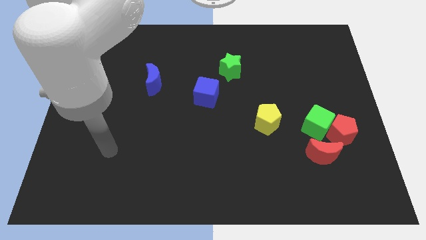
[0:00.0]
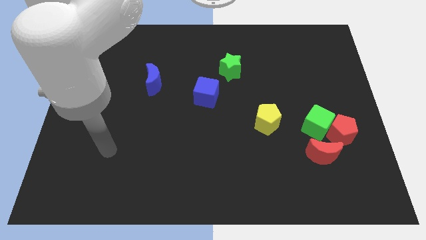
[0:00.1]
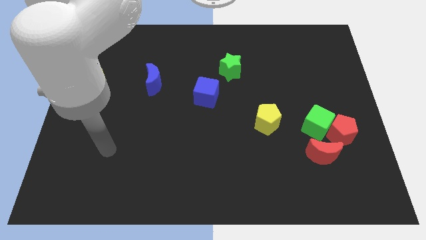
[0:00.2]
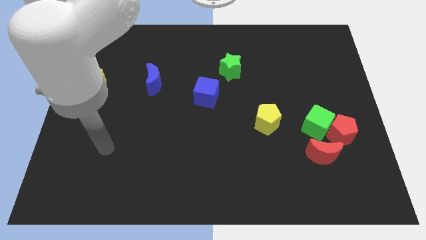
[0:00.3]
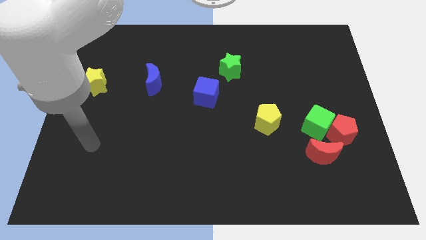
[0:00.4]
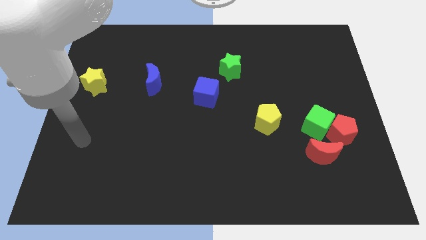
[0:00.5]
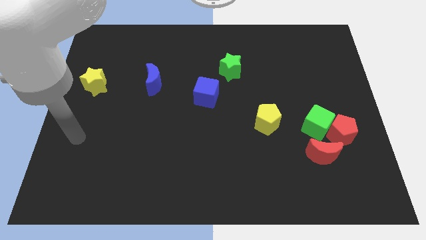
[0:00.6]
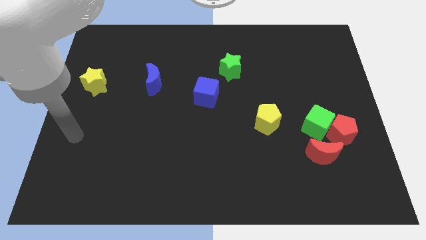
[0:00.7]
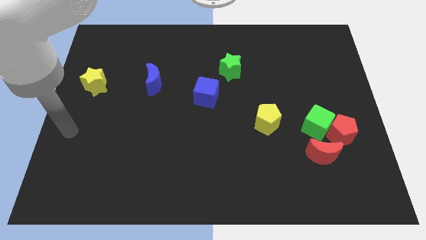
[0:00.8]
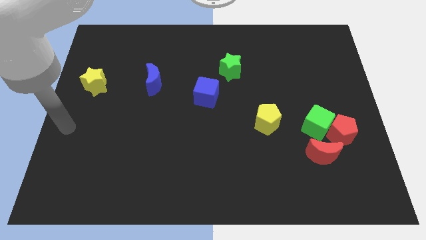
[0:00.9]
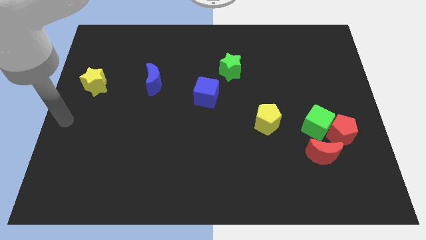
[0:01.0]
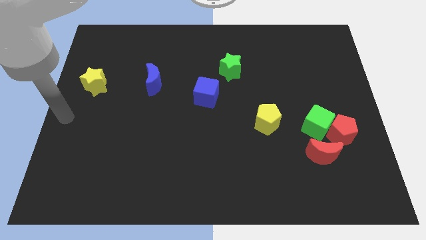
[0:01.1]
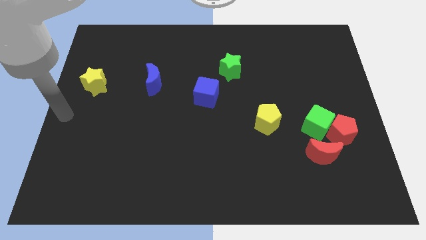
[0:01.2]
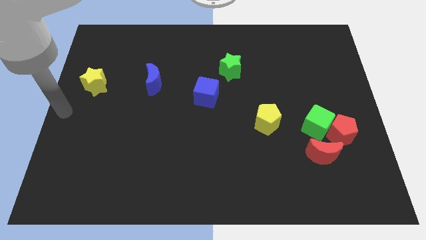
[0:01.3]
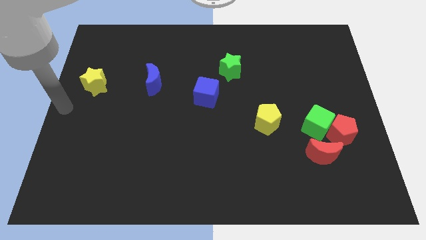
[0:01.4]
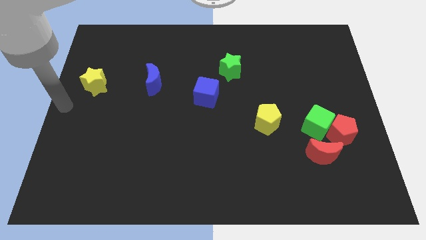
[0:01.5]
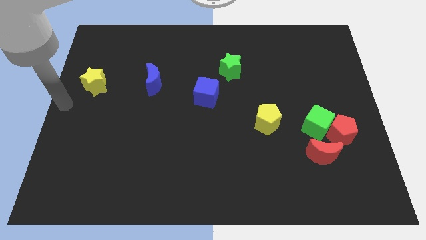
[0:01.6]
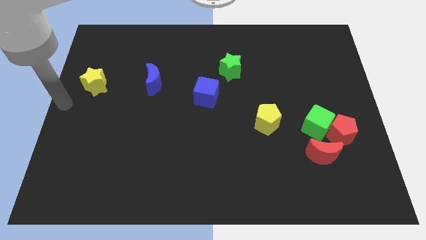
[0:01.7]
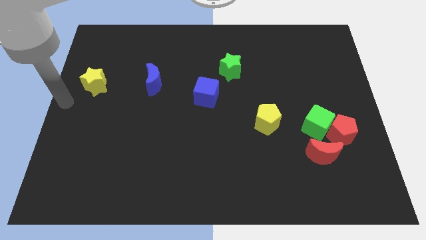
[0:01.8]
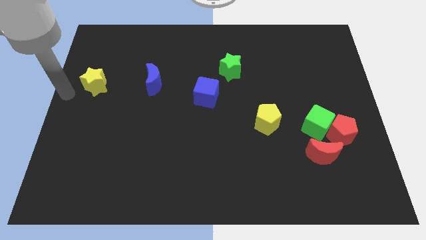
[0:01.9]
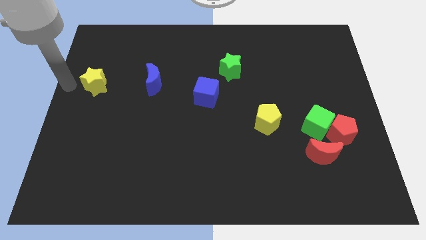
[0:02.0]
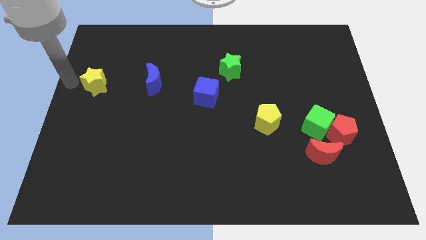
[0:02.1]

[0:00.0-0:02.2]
move the arm left to the yellow star

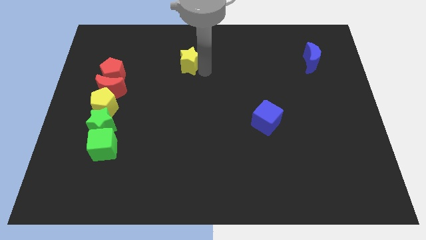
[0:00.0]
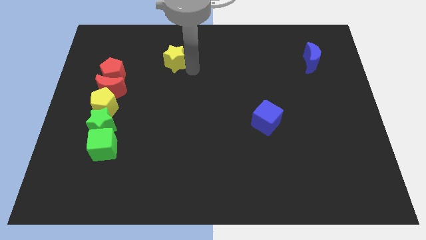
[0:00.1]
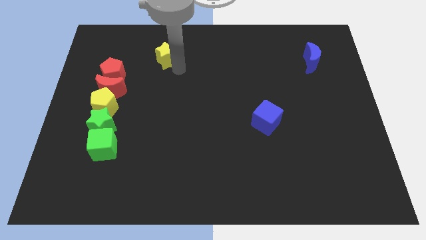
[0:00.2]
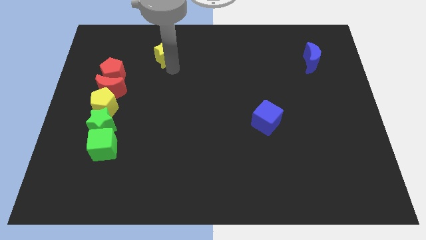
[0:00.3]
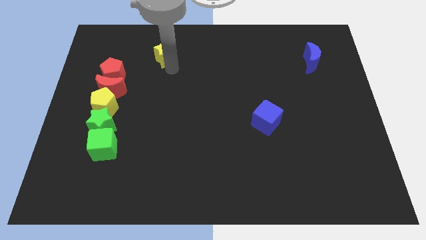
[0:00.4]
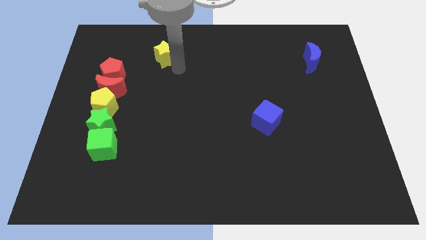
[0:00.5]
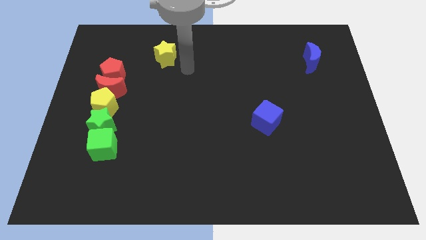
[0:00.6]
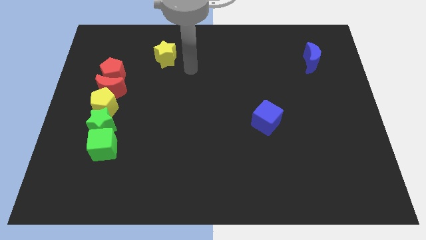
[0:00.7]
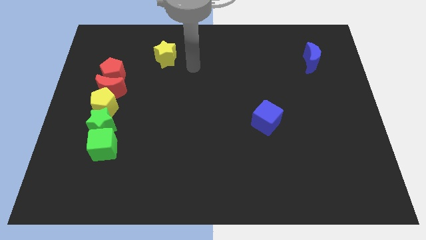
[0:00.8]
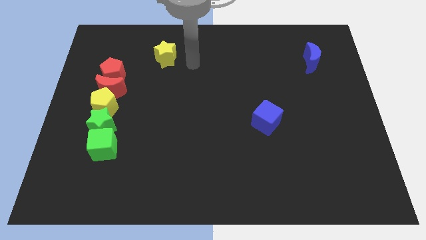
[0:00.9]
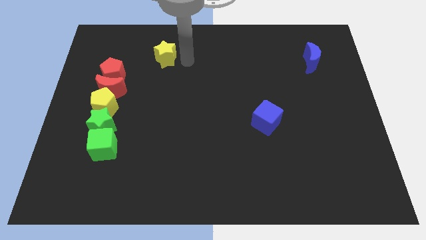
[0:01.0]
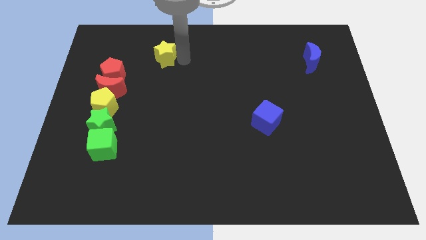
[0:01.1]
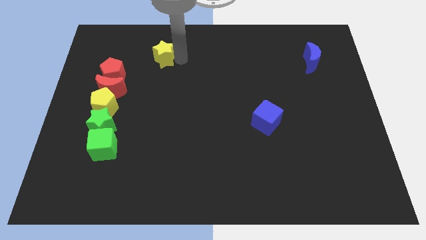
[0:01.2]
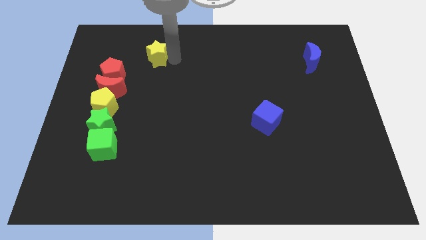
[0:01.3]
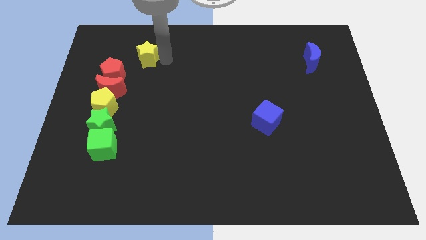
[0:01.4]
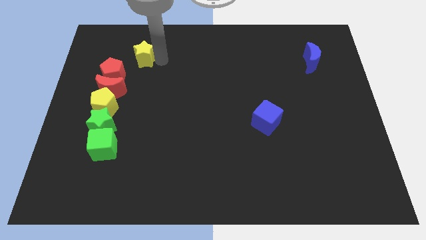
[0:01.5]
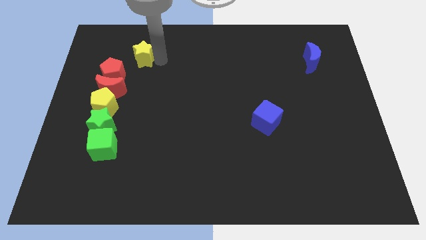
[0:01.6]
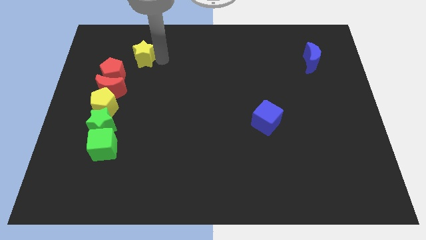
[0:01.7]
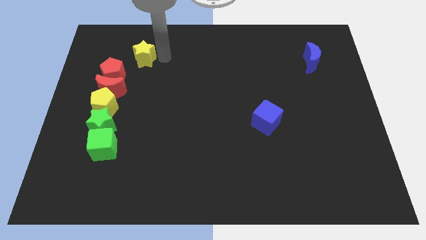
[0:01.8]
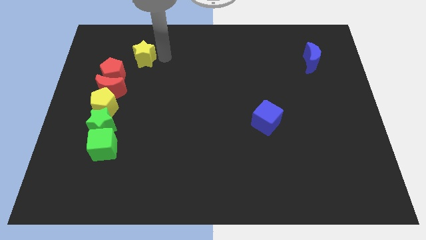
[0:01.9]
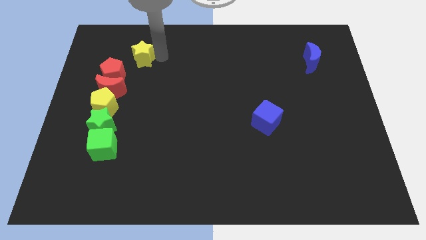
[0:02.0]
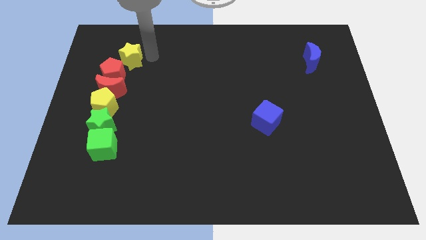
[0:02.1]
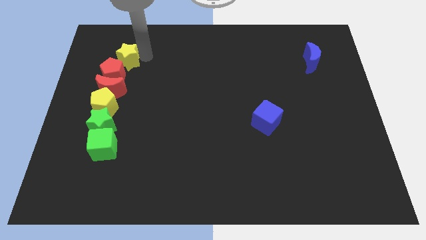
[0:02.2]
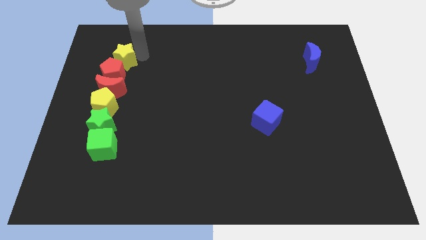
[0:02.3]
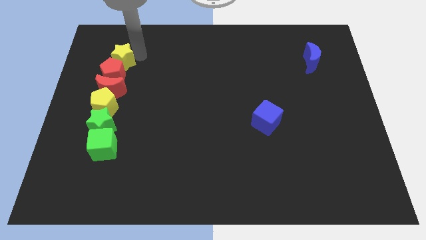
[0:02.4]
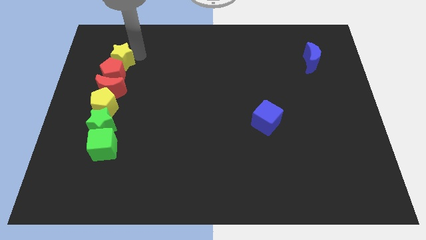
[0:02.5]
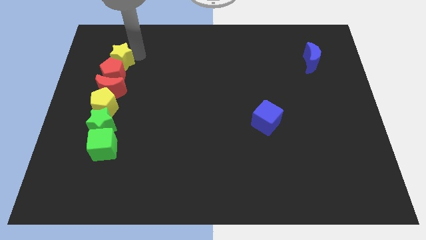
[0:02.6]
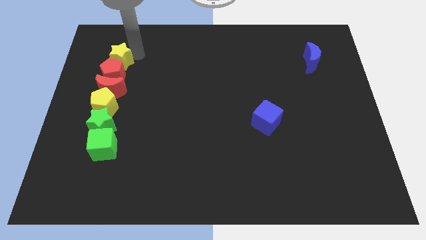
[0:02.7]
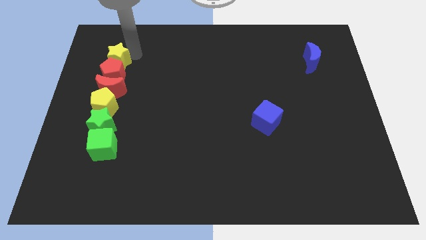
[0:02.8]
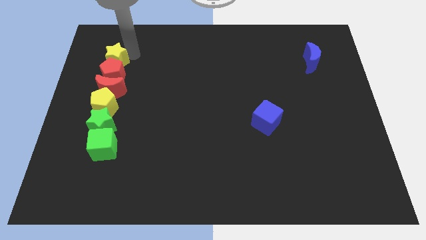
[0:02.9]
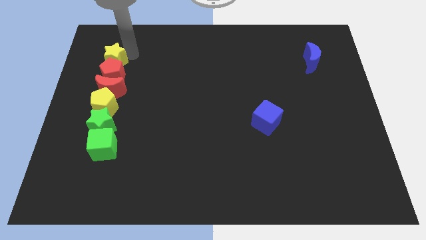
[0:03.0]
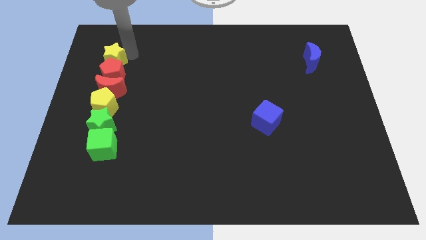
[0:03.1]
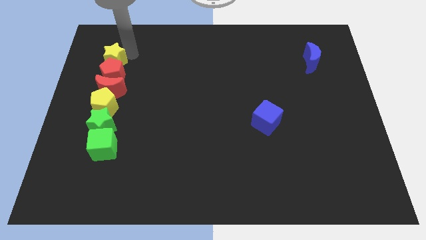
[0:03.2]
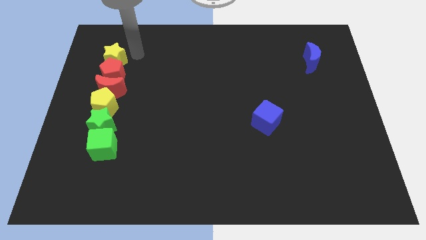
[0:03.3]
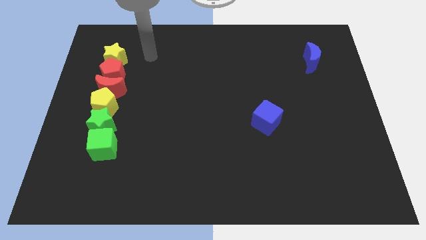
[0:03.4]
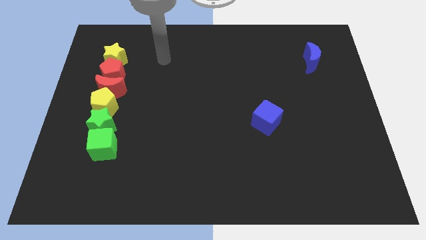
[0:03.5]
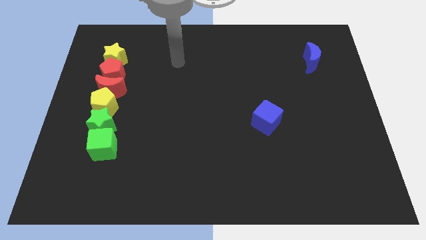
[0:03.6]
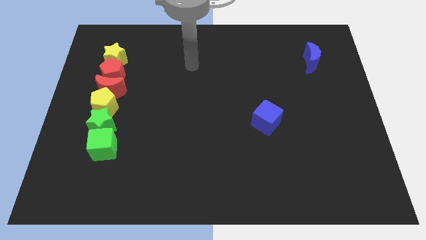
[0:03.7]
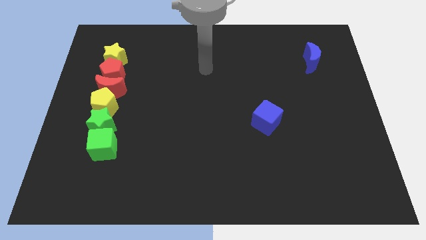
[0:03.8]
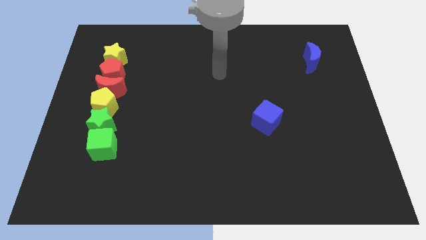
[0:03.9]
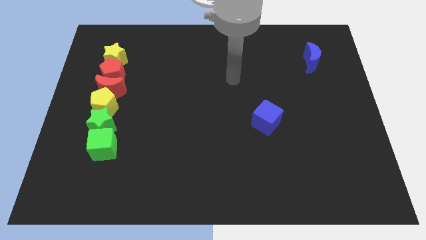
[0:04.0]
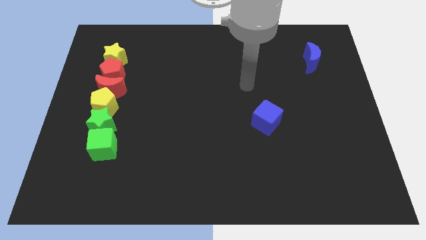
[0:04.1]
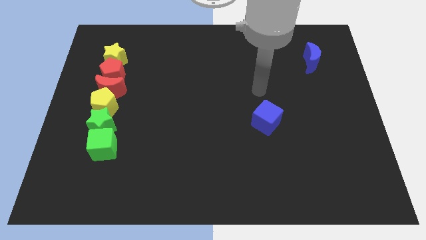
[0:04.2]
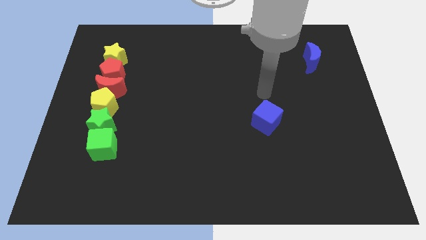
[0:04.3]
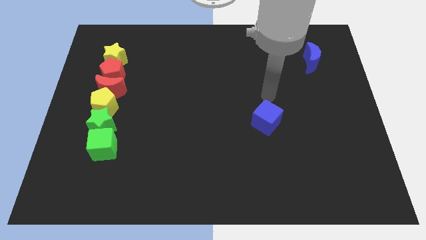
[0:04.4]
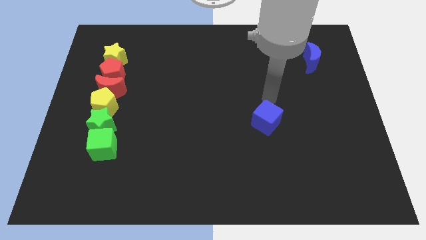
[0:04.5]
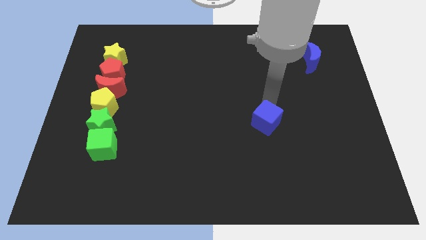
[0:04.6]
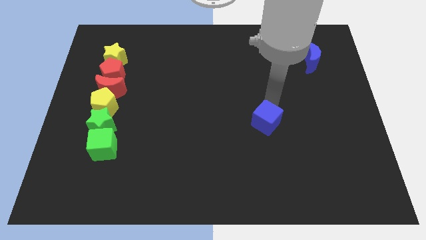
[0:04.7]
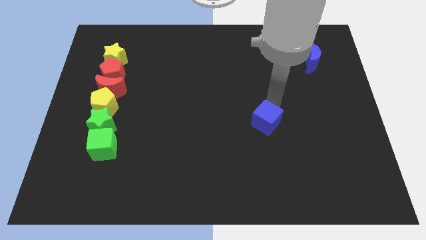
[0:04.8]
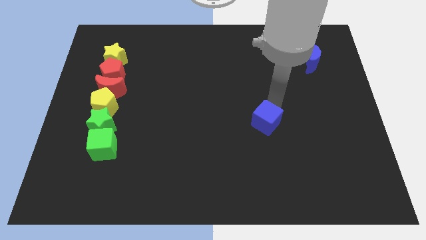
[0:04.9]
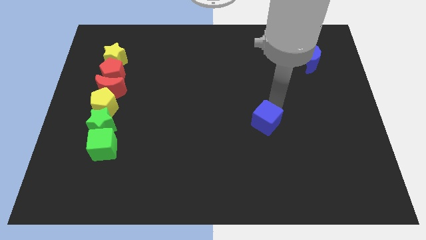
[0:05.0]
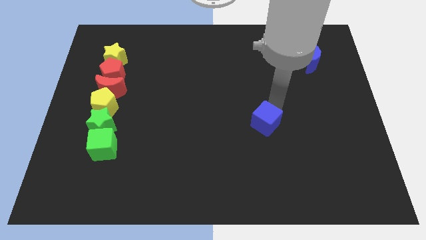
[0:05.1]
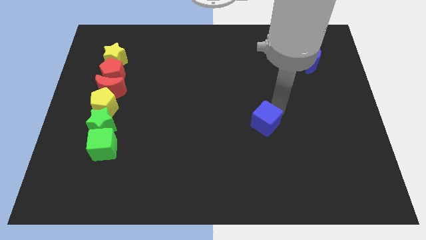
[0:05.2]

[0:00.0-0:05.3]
drag the yellow star and place it above the red pentagon

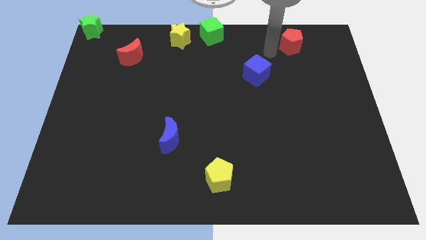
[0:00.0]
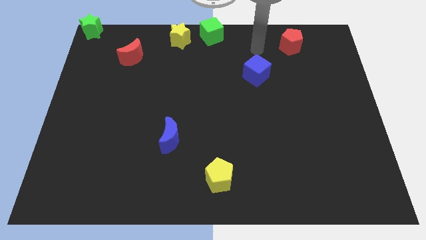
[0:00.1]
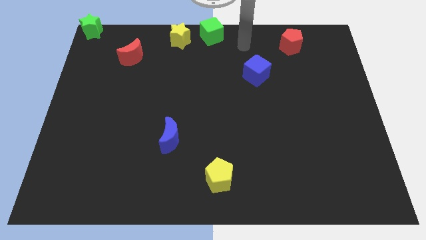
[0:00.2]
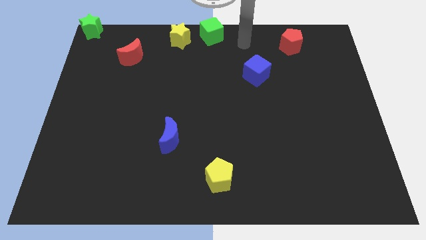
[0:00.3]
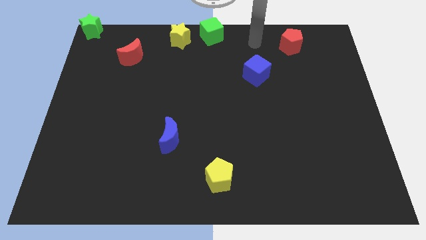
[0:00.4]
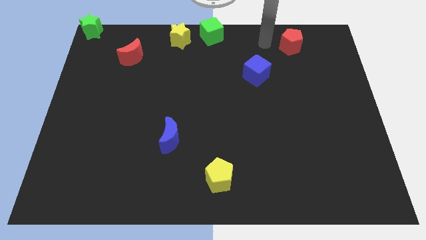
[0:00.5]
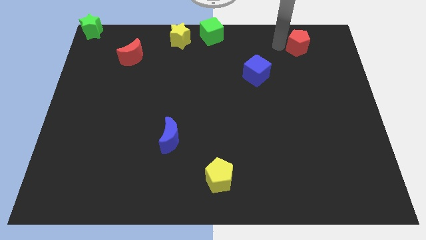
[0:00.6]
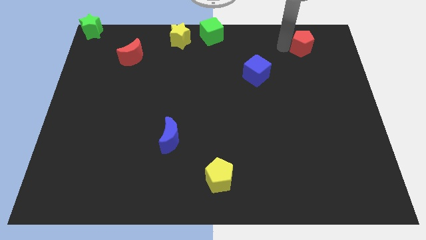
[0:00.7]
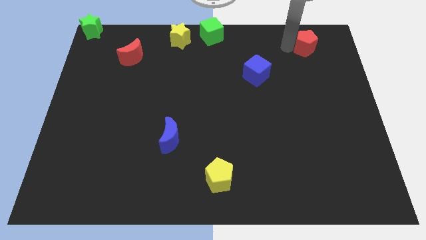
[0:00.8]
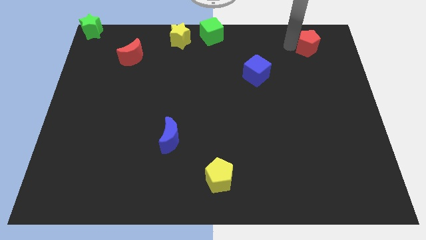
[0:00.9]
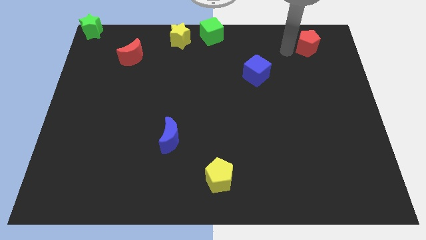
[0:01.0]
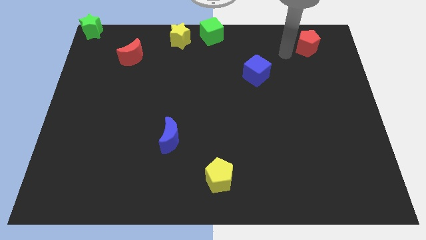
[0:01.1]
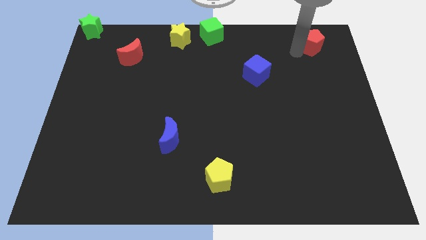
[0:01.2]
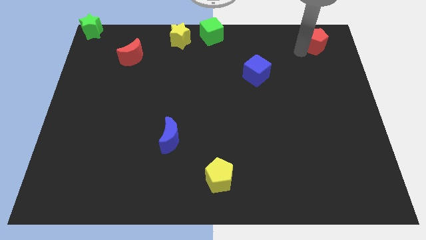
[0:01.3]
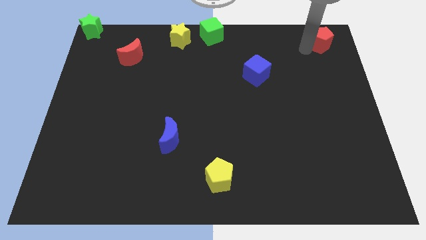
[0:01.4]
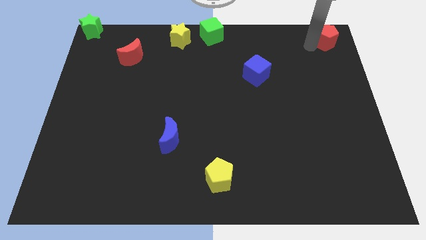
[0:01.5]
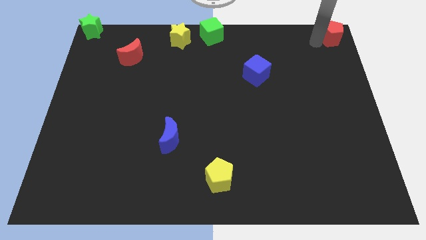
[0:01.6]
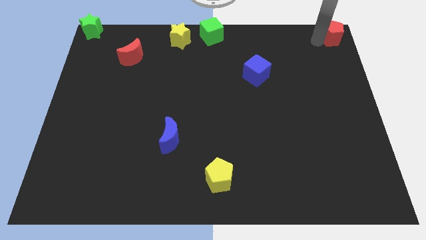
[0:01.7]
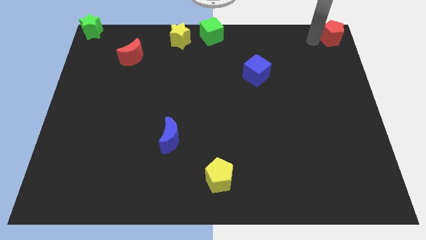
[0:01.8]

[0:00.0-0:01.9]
move red pentagon to the top right corner
